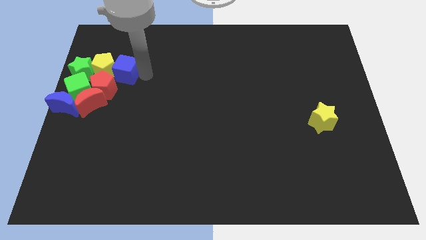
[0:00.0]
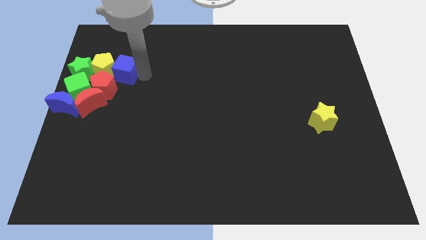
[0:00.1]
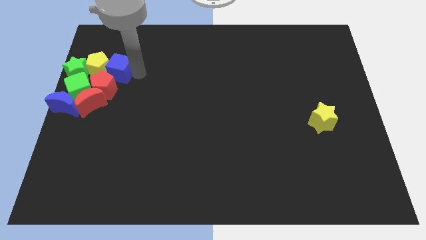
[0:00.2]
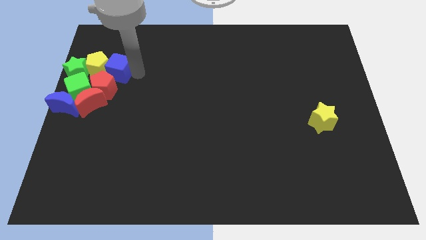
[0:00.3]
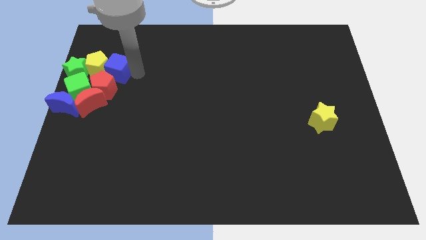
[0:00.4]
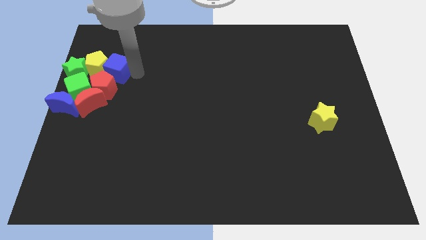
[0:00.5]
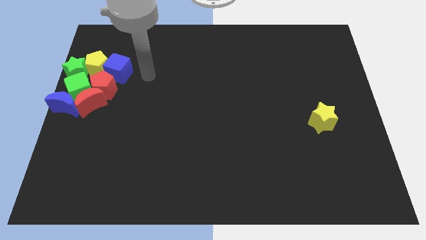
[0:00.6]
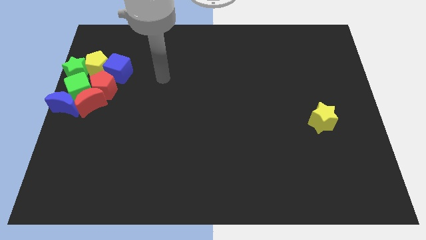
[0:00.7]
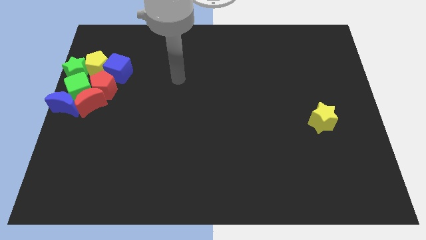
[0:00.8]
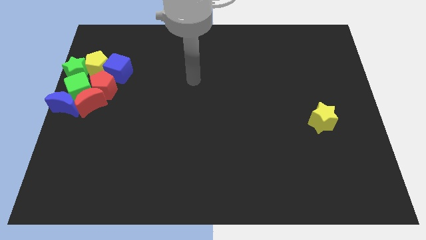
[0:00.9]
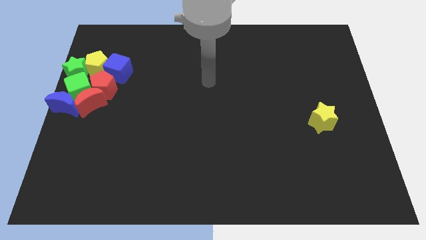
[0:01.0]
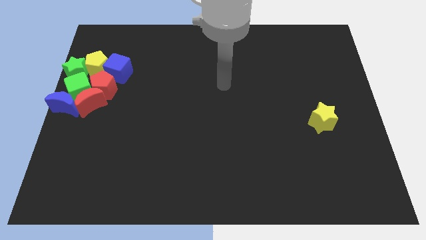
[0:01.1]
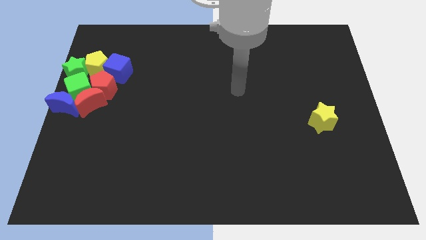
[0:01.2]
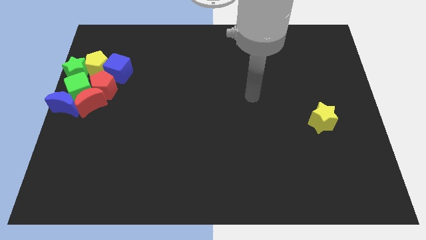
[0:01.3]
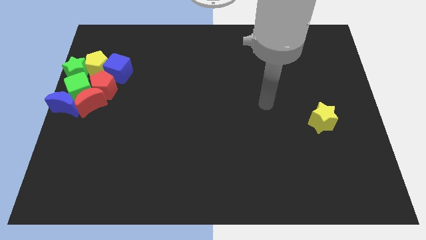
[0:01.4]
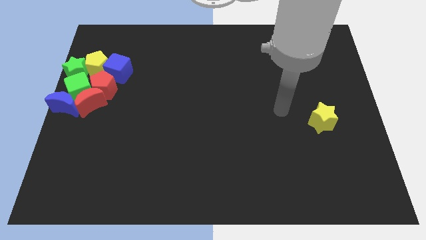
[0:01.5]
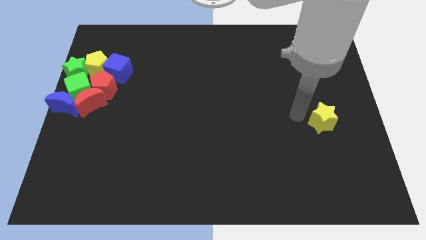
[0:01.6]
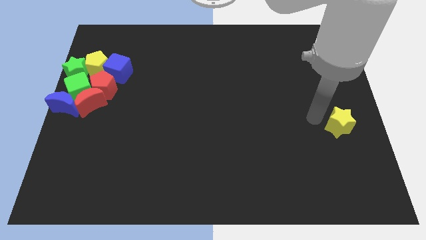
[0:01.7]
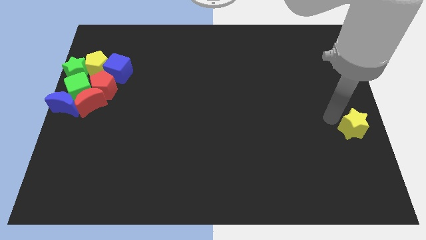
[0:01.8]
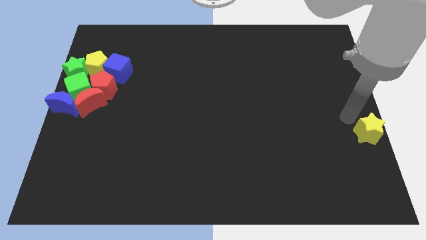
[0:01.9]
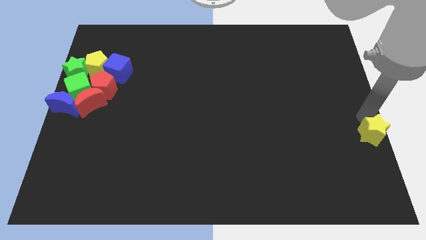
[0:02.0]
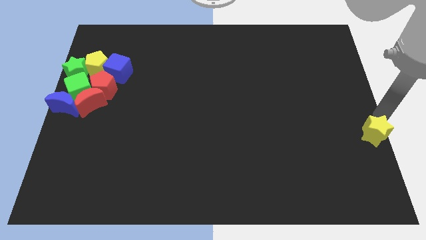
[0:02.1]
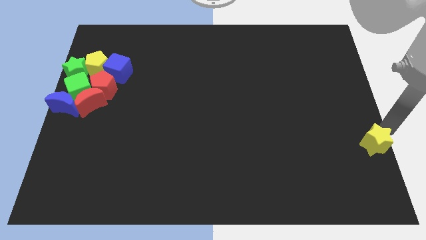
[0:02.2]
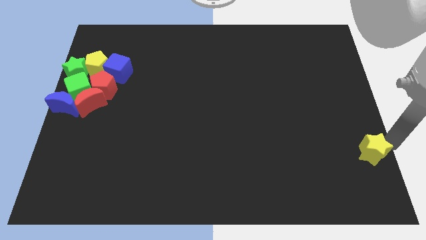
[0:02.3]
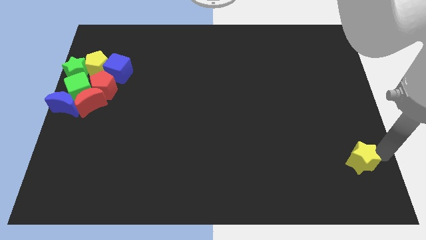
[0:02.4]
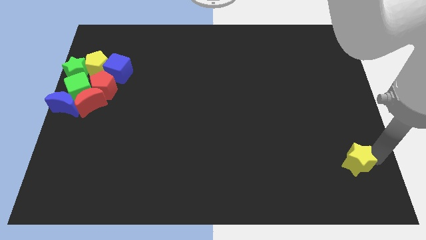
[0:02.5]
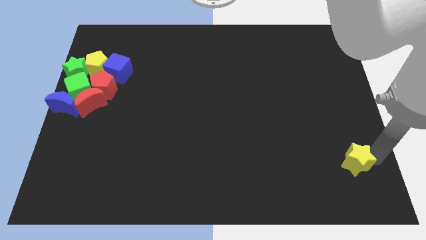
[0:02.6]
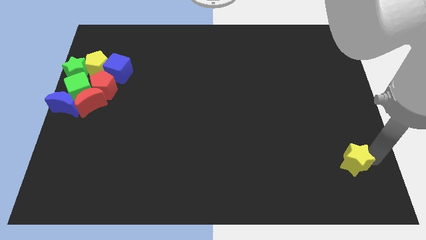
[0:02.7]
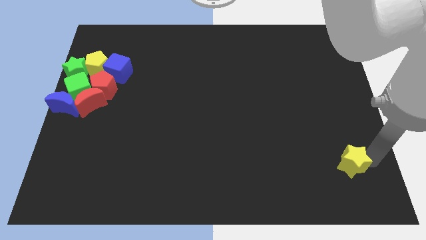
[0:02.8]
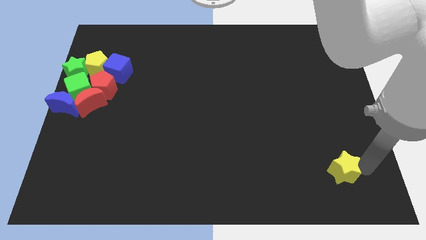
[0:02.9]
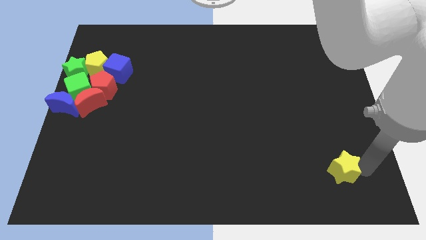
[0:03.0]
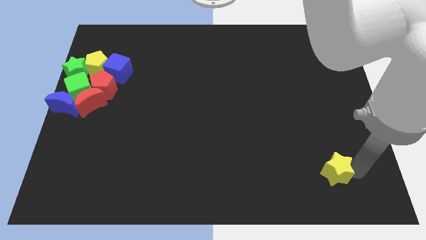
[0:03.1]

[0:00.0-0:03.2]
move the yellow star towards the bottom right of the board

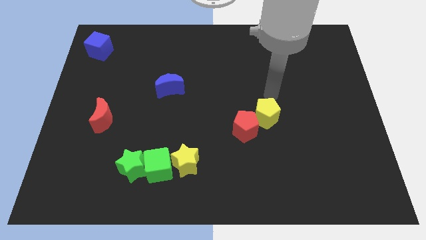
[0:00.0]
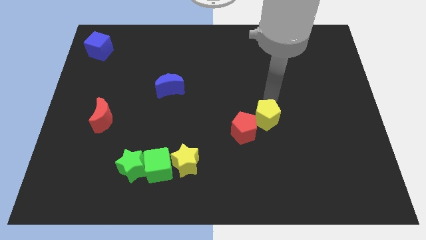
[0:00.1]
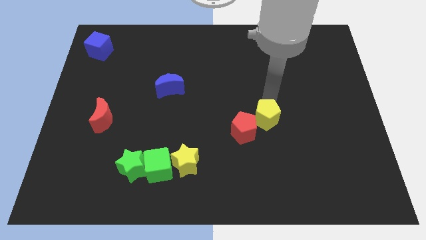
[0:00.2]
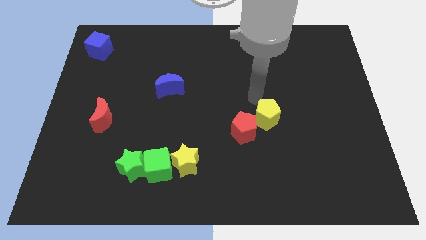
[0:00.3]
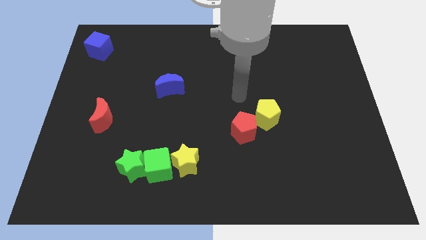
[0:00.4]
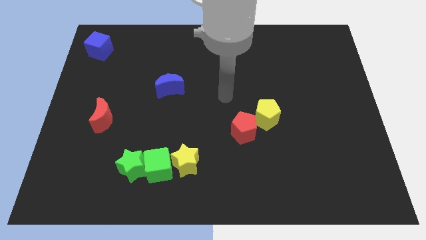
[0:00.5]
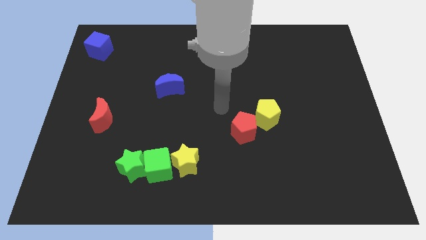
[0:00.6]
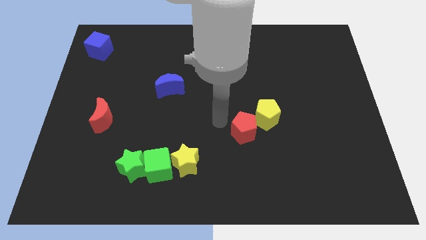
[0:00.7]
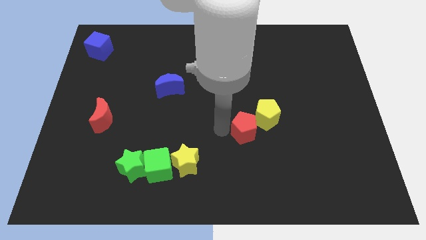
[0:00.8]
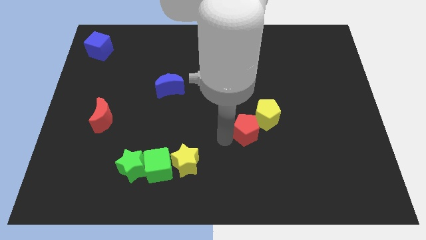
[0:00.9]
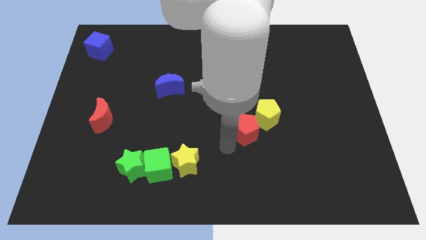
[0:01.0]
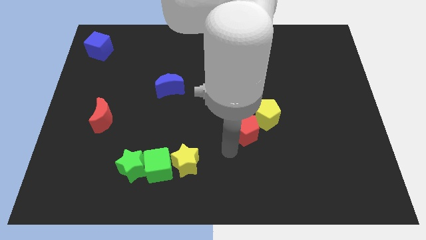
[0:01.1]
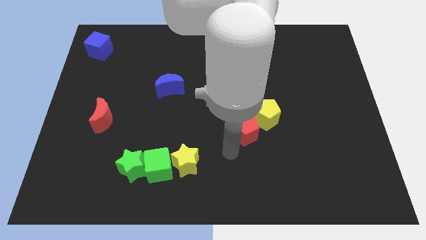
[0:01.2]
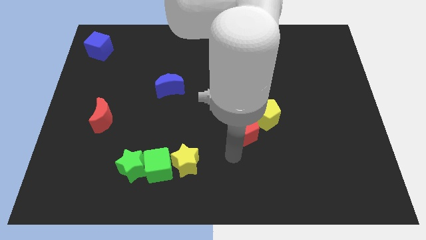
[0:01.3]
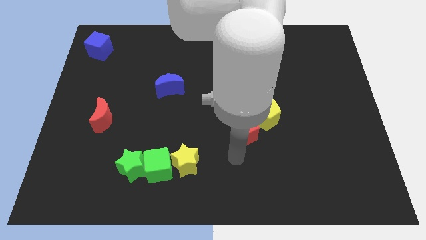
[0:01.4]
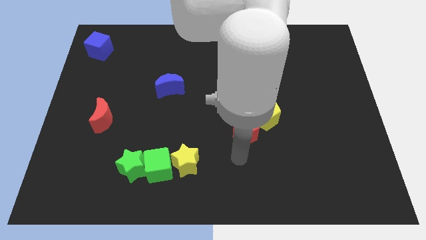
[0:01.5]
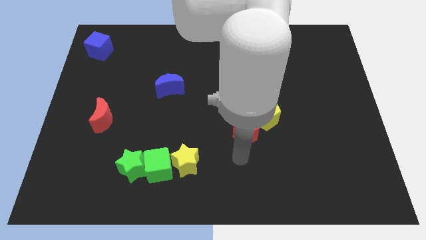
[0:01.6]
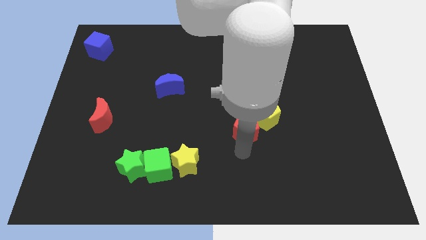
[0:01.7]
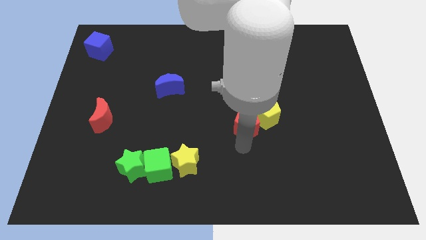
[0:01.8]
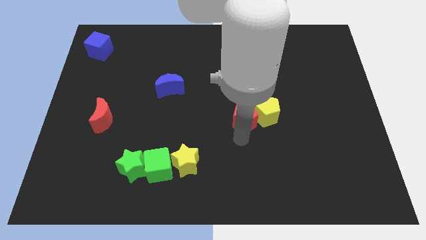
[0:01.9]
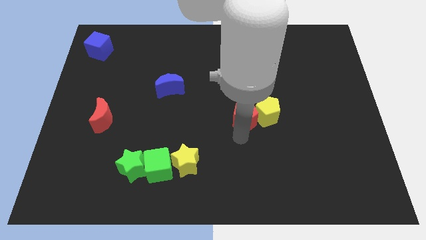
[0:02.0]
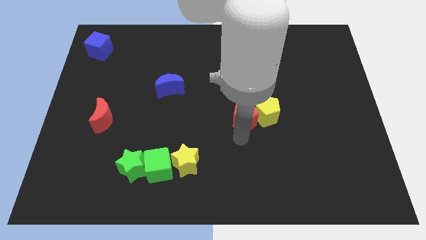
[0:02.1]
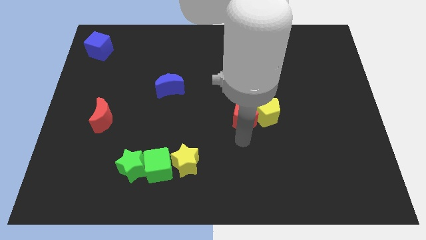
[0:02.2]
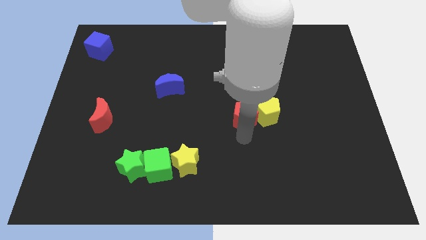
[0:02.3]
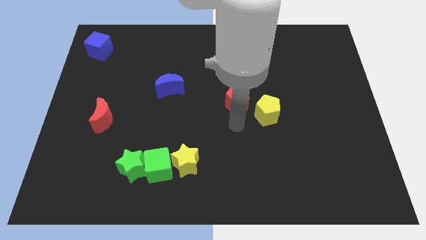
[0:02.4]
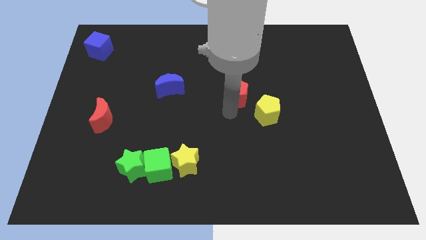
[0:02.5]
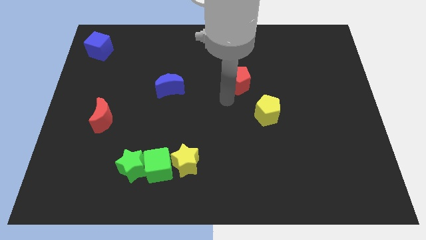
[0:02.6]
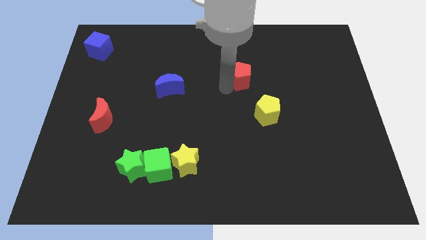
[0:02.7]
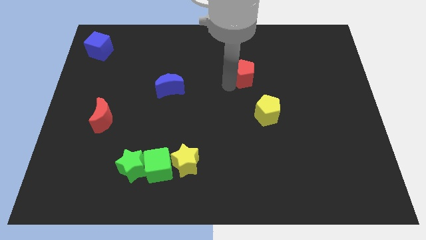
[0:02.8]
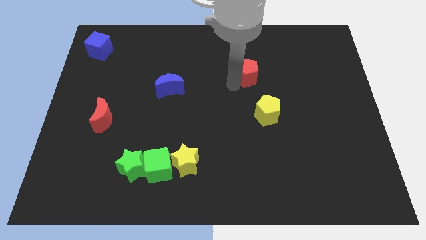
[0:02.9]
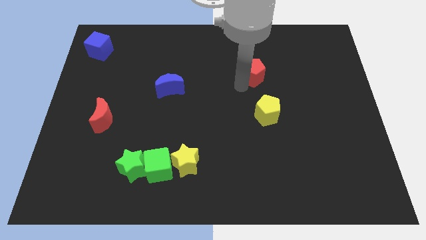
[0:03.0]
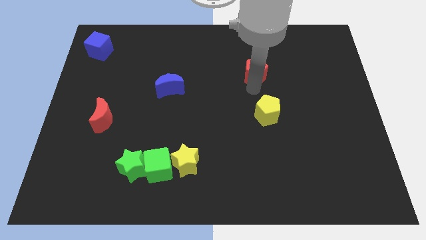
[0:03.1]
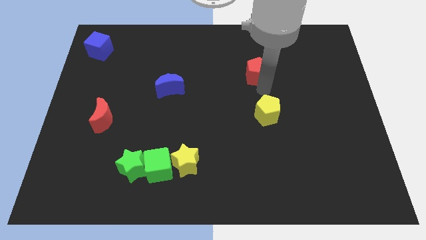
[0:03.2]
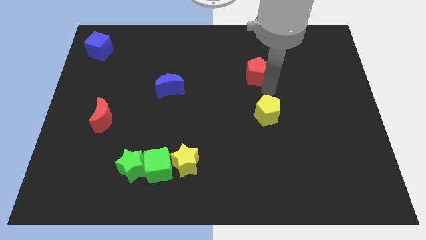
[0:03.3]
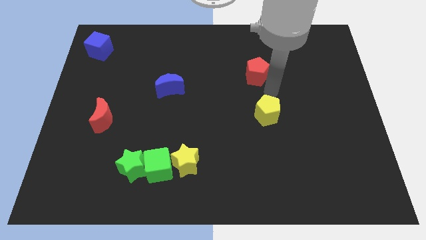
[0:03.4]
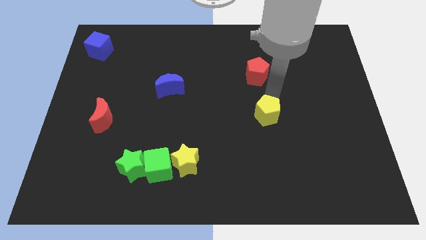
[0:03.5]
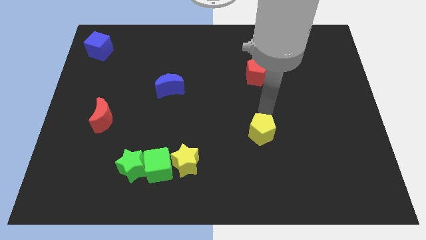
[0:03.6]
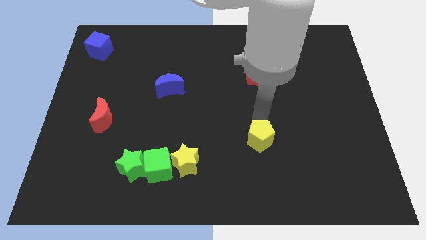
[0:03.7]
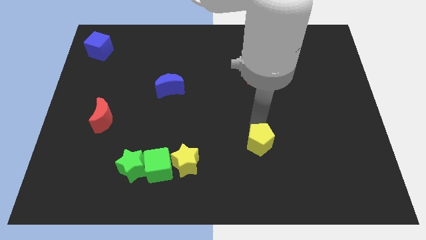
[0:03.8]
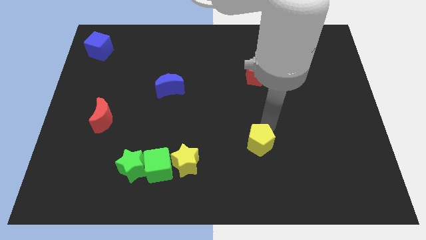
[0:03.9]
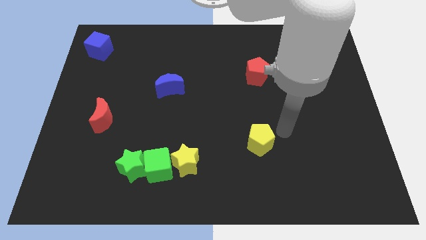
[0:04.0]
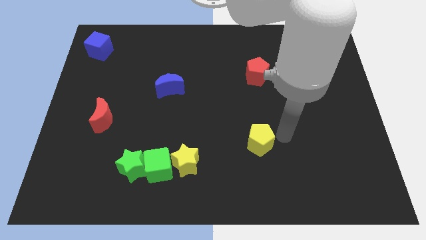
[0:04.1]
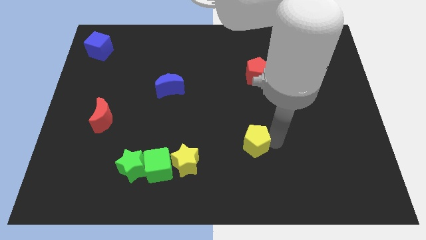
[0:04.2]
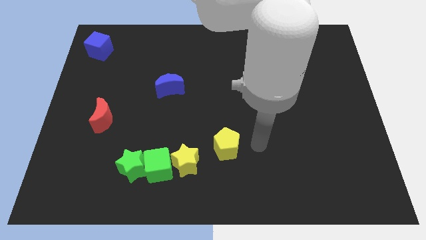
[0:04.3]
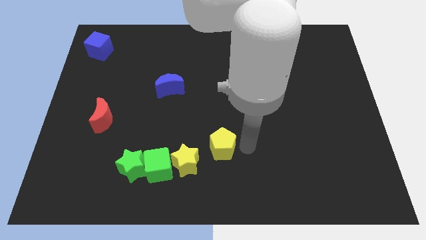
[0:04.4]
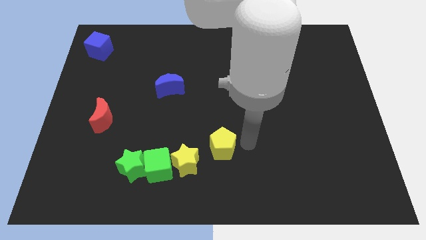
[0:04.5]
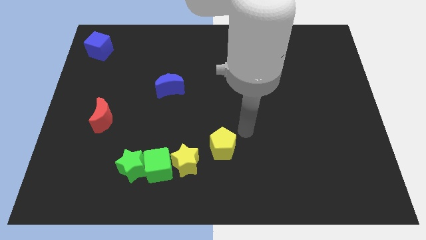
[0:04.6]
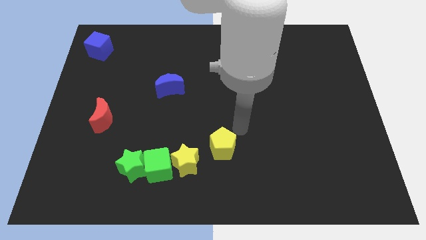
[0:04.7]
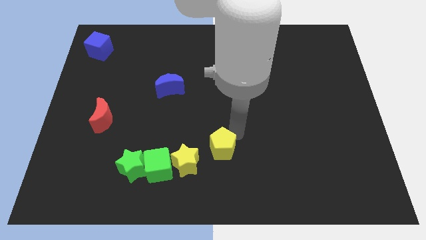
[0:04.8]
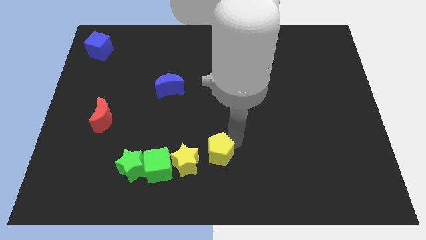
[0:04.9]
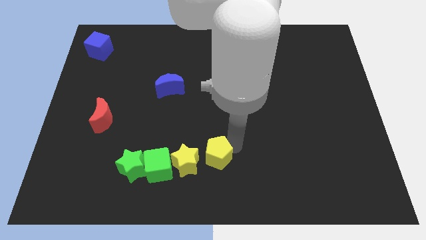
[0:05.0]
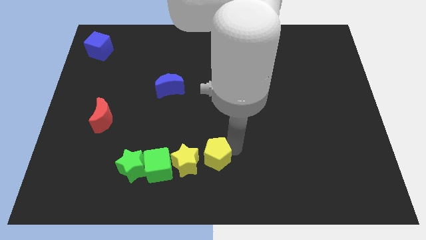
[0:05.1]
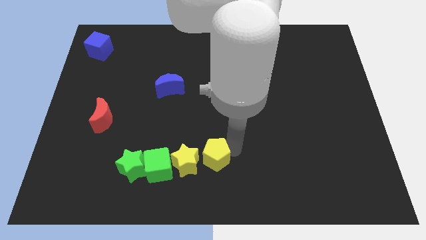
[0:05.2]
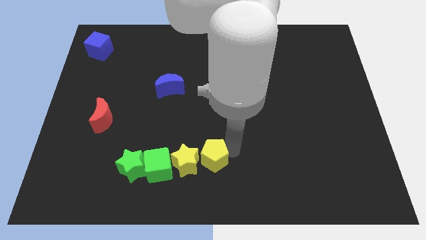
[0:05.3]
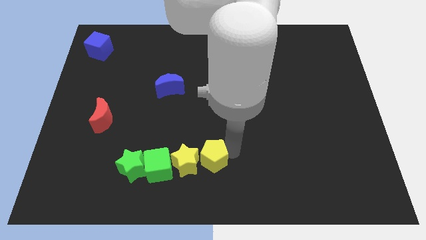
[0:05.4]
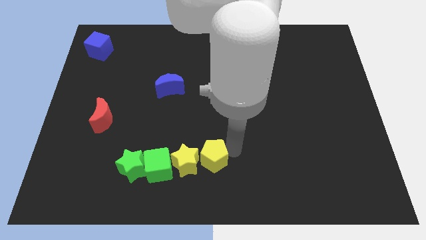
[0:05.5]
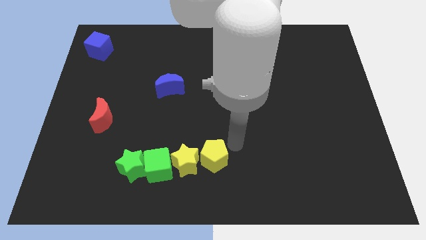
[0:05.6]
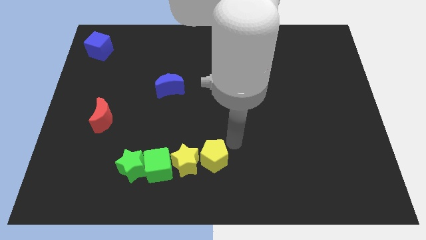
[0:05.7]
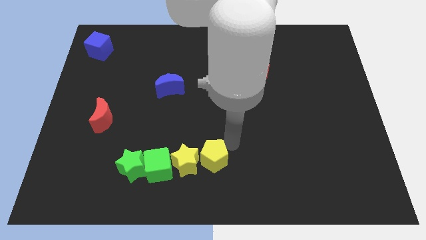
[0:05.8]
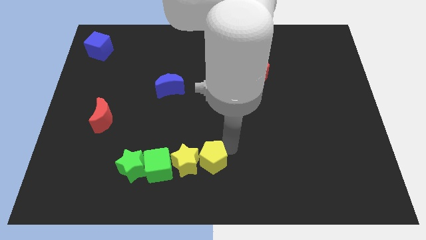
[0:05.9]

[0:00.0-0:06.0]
separate the yellow and red pentagon from each other
